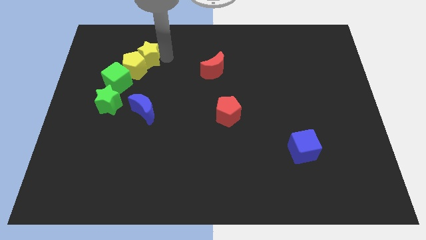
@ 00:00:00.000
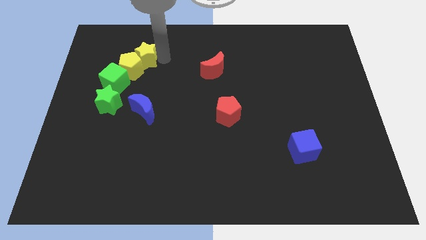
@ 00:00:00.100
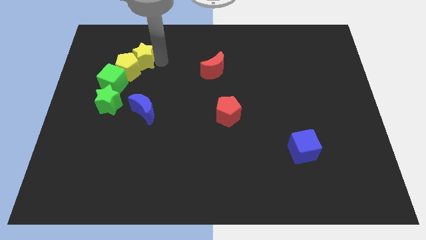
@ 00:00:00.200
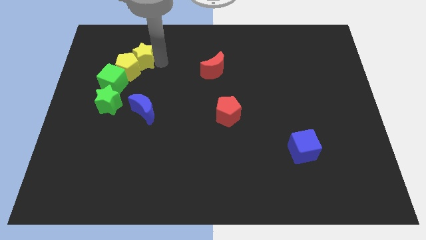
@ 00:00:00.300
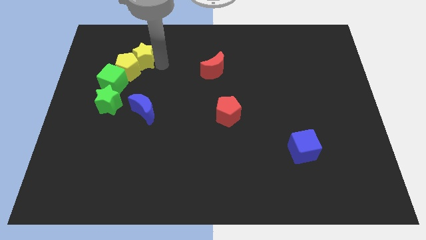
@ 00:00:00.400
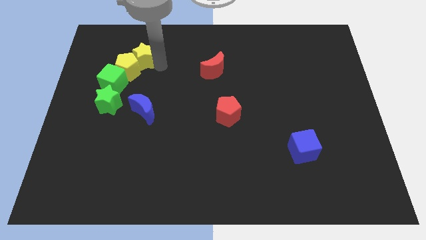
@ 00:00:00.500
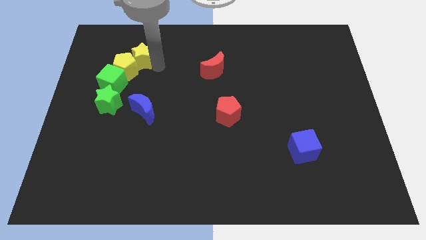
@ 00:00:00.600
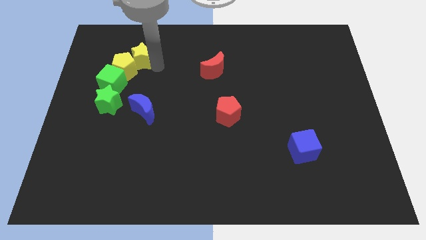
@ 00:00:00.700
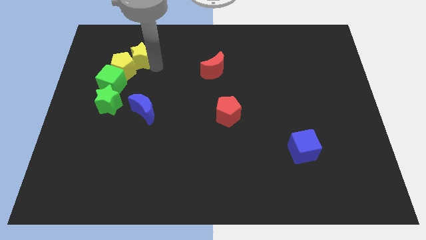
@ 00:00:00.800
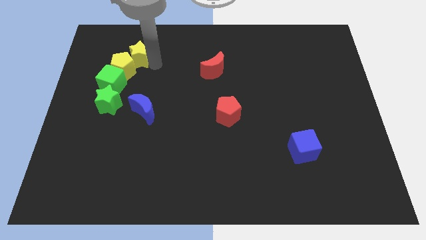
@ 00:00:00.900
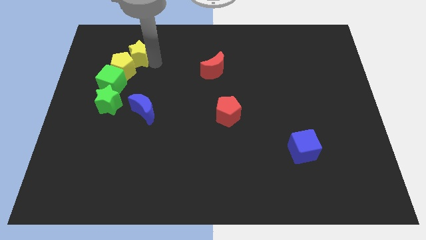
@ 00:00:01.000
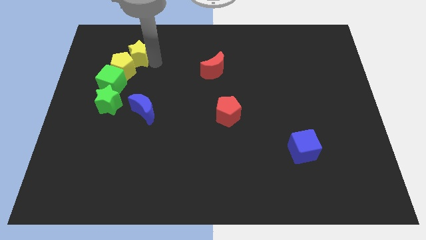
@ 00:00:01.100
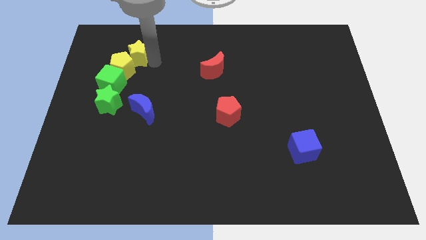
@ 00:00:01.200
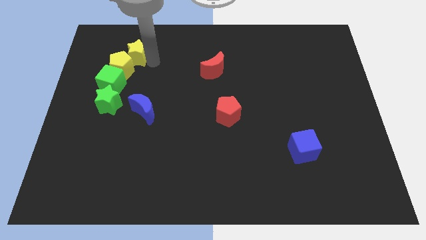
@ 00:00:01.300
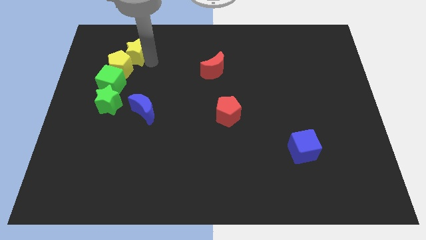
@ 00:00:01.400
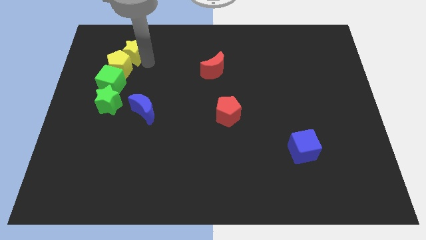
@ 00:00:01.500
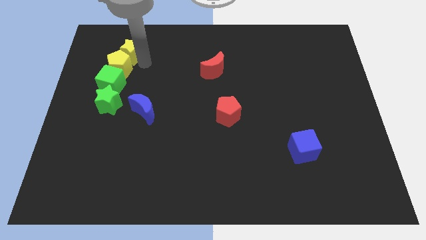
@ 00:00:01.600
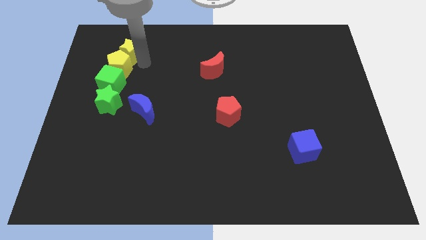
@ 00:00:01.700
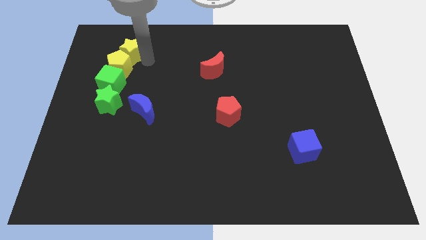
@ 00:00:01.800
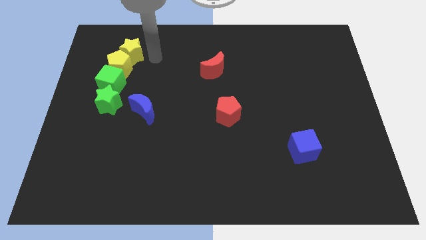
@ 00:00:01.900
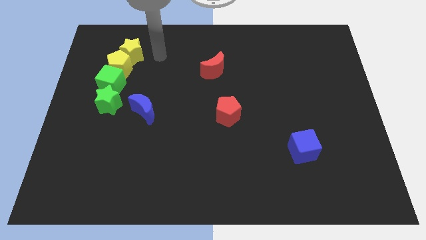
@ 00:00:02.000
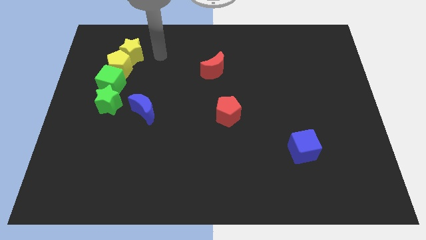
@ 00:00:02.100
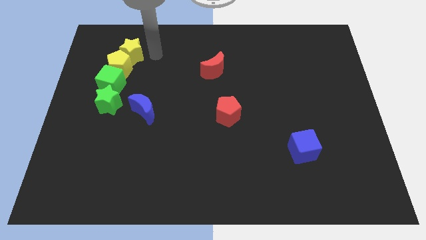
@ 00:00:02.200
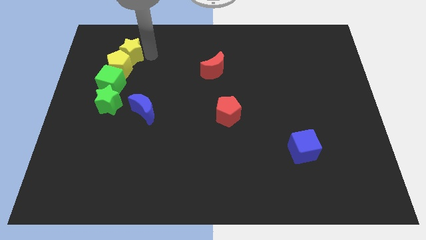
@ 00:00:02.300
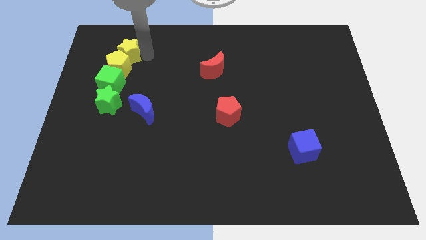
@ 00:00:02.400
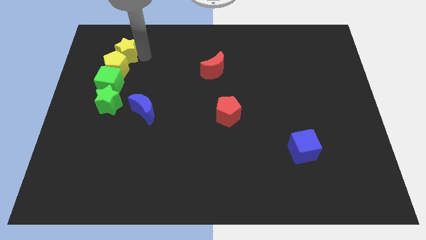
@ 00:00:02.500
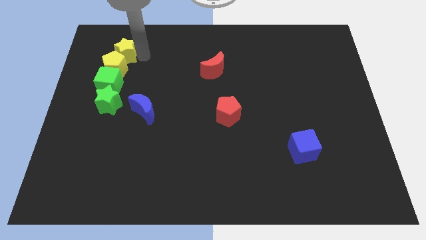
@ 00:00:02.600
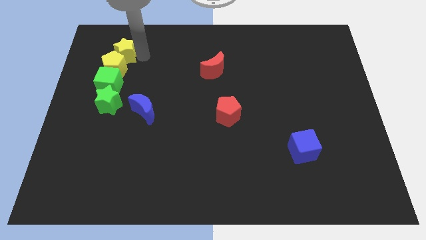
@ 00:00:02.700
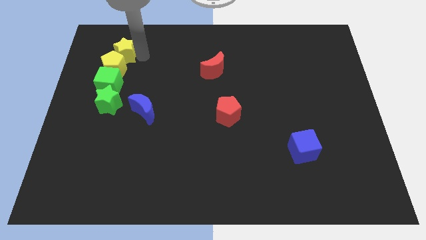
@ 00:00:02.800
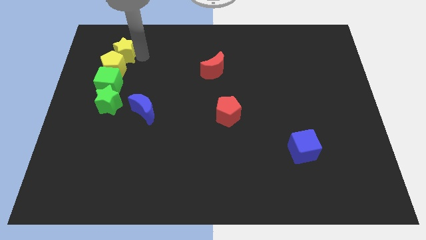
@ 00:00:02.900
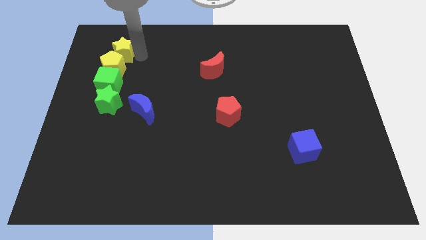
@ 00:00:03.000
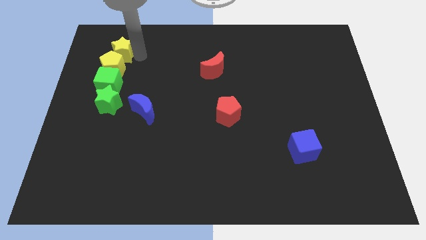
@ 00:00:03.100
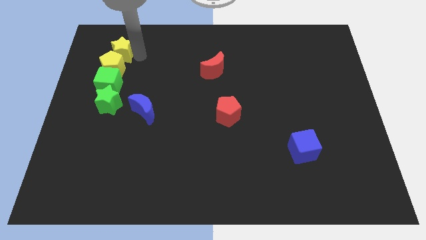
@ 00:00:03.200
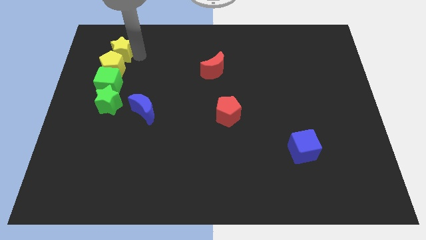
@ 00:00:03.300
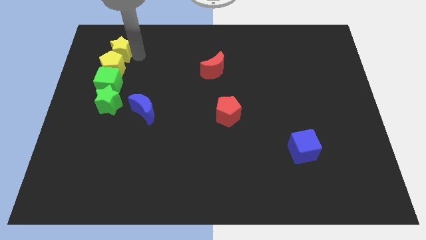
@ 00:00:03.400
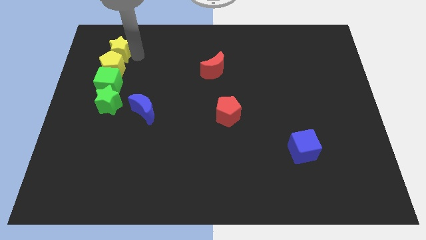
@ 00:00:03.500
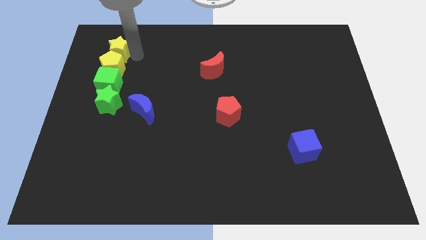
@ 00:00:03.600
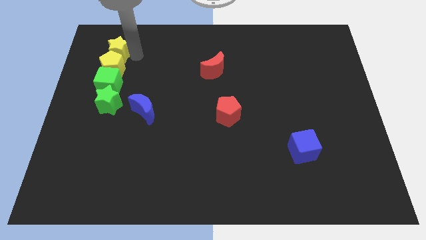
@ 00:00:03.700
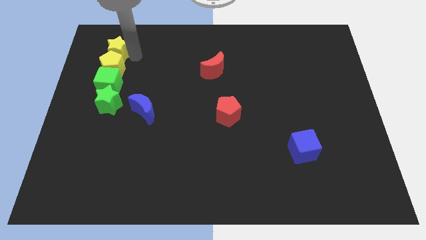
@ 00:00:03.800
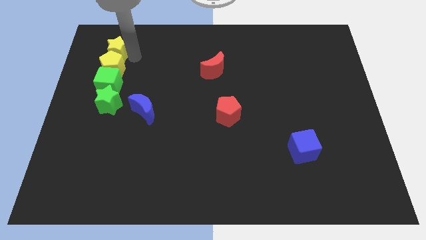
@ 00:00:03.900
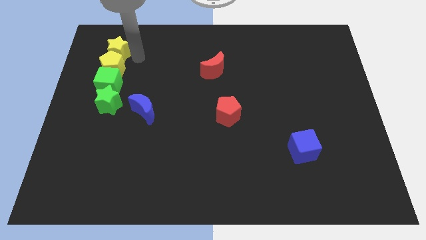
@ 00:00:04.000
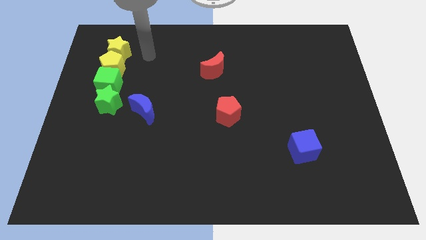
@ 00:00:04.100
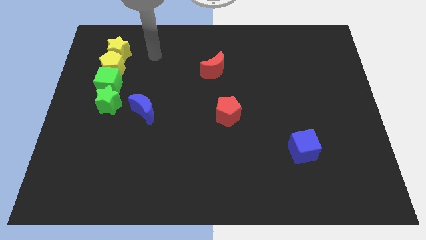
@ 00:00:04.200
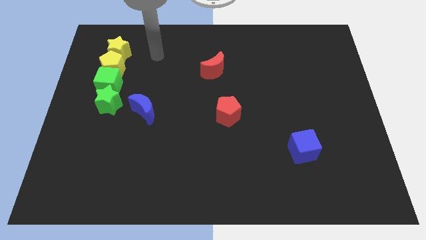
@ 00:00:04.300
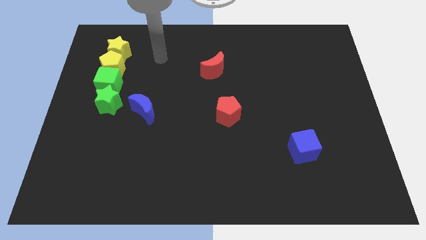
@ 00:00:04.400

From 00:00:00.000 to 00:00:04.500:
move yellow star to top left of the board

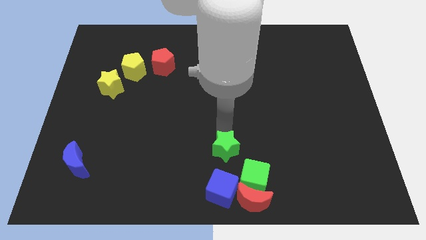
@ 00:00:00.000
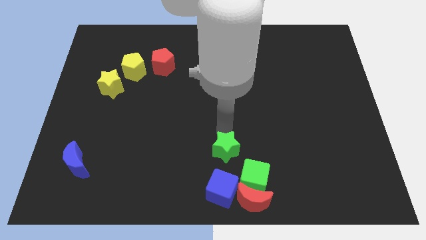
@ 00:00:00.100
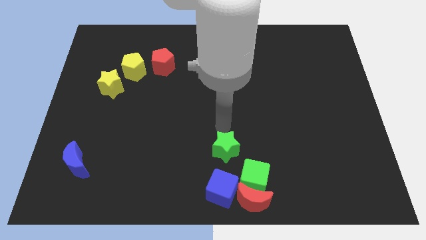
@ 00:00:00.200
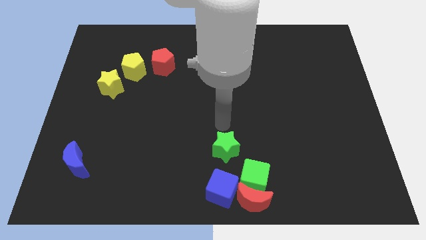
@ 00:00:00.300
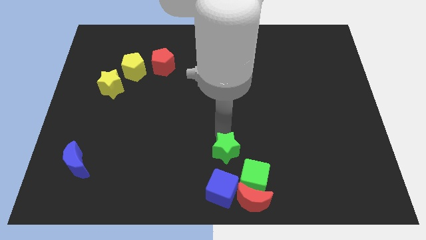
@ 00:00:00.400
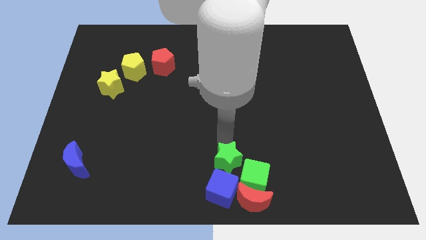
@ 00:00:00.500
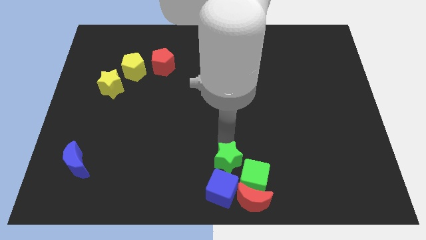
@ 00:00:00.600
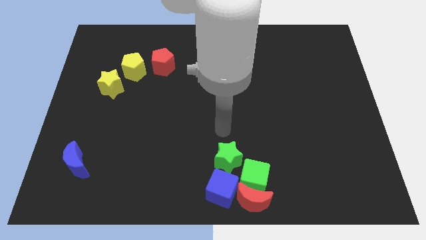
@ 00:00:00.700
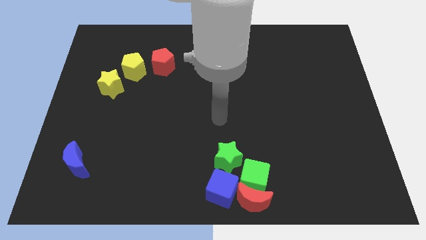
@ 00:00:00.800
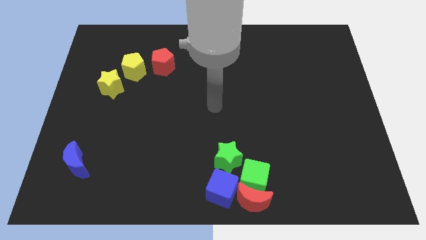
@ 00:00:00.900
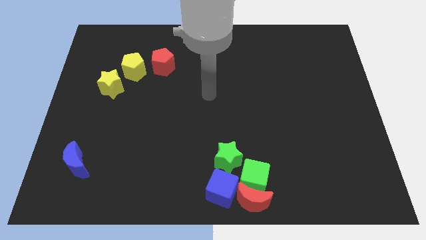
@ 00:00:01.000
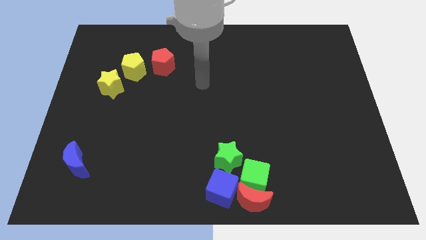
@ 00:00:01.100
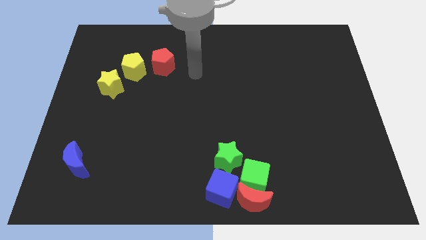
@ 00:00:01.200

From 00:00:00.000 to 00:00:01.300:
move the green star close to blue cube

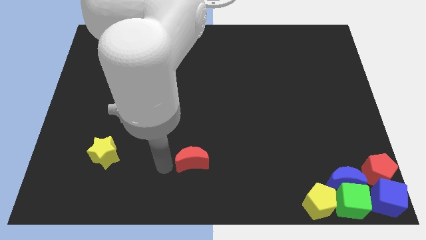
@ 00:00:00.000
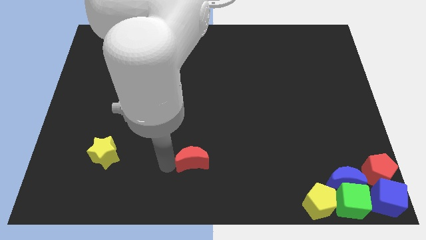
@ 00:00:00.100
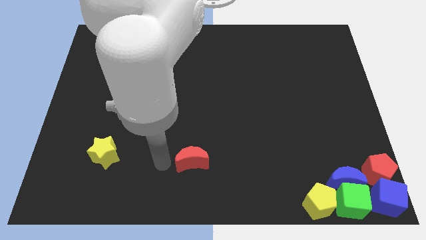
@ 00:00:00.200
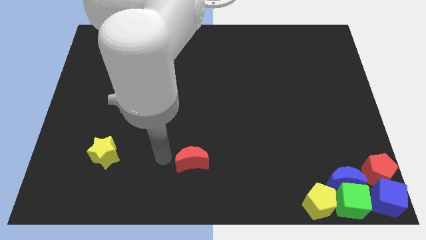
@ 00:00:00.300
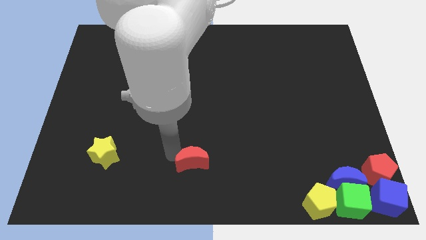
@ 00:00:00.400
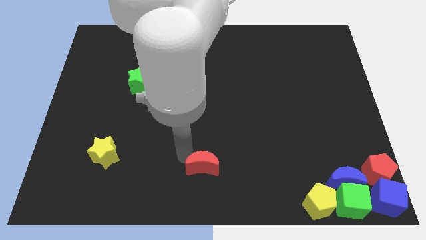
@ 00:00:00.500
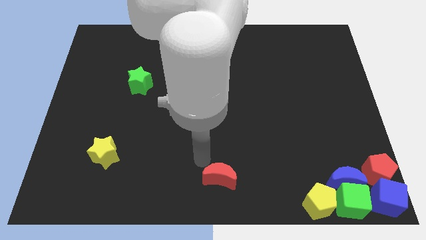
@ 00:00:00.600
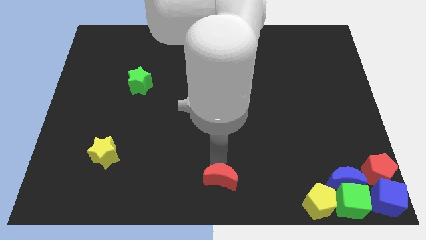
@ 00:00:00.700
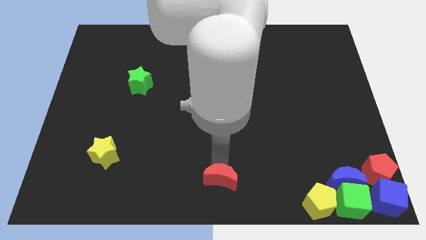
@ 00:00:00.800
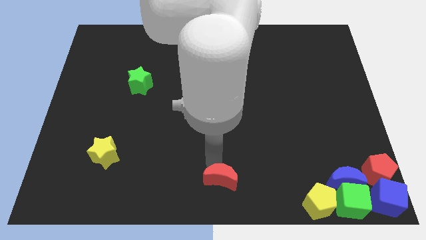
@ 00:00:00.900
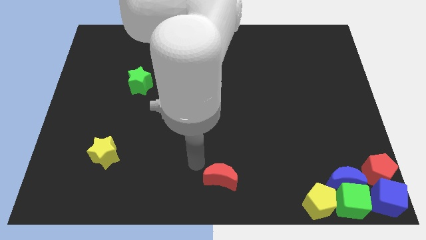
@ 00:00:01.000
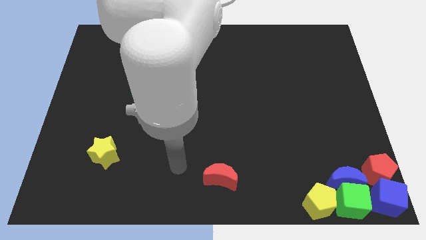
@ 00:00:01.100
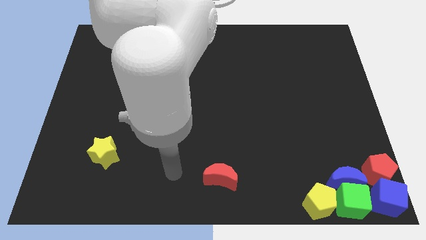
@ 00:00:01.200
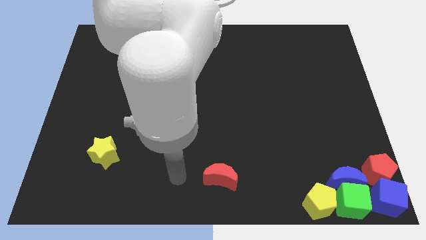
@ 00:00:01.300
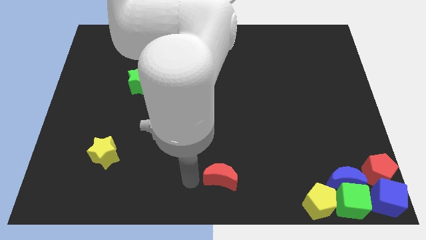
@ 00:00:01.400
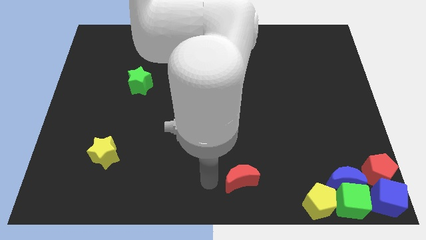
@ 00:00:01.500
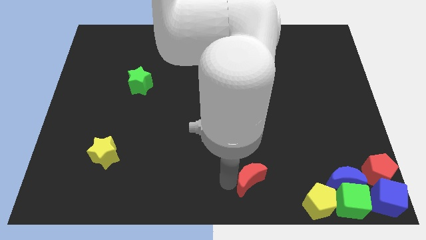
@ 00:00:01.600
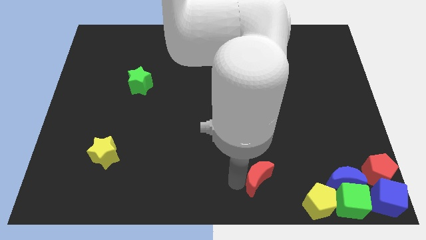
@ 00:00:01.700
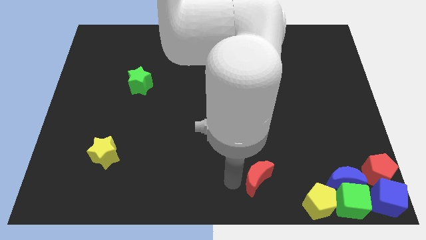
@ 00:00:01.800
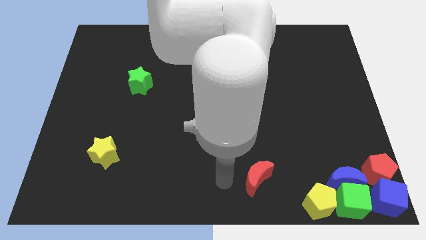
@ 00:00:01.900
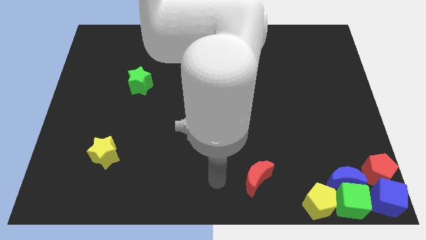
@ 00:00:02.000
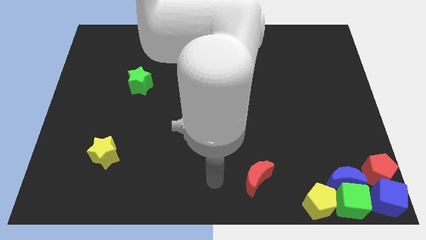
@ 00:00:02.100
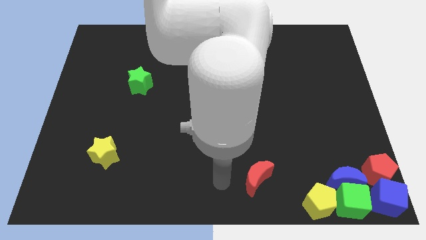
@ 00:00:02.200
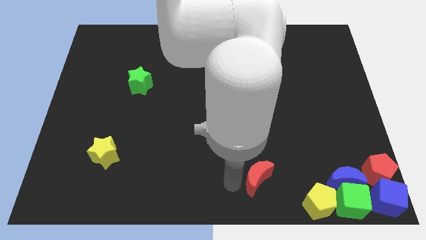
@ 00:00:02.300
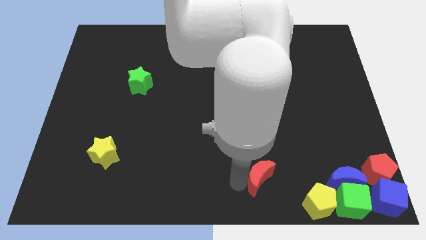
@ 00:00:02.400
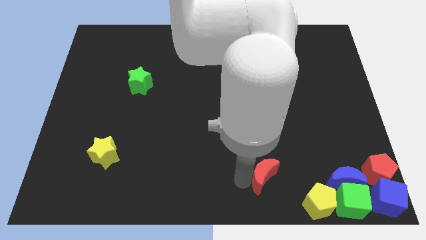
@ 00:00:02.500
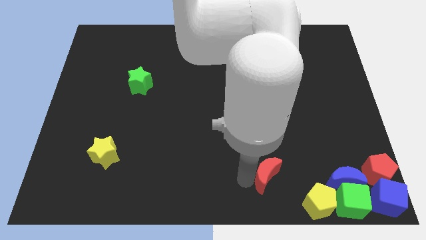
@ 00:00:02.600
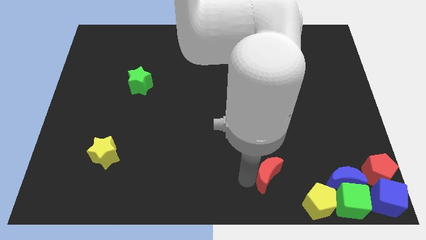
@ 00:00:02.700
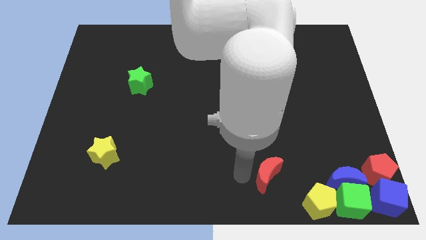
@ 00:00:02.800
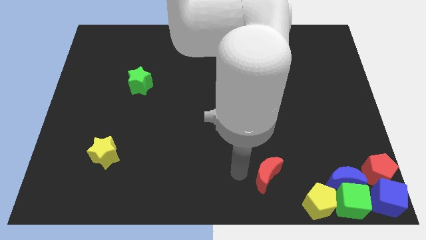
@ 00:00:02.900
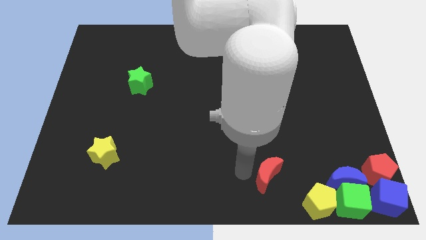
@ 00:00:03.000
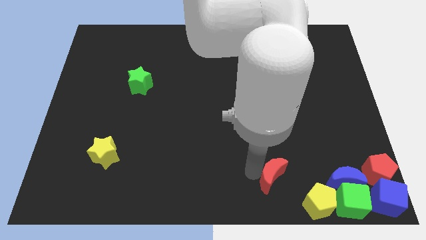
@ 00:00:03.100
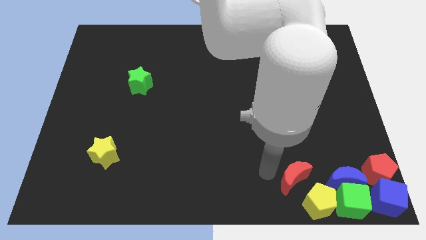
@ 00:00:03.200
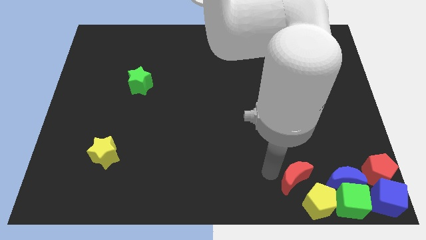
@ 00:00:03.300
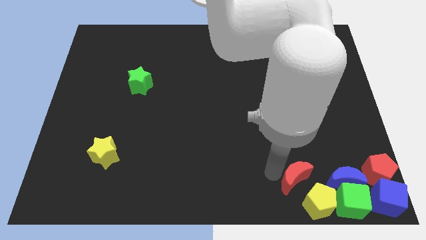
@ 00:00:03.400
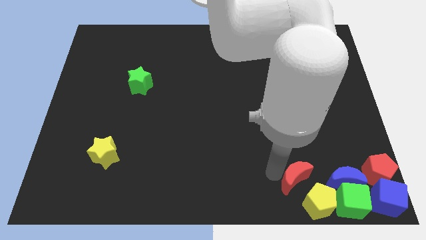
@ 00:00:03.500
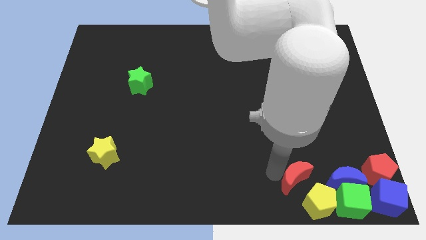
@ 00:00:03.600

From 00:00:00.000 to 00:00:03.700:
put the red moon parallel to blue moon
